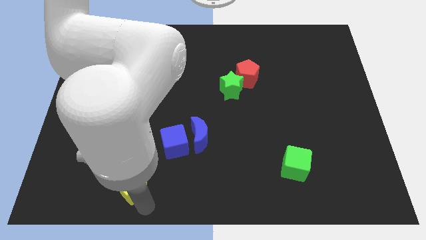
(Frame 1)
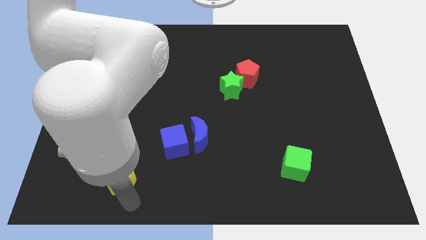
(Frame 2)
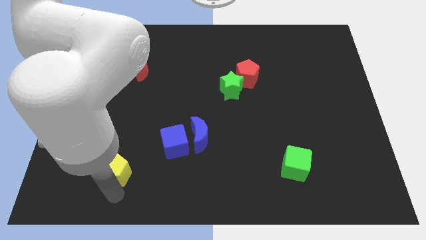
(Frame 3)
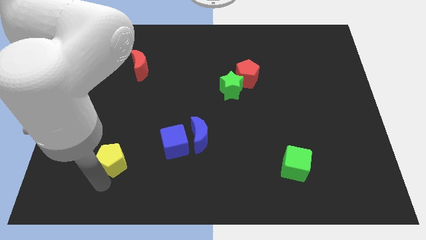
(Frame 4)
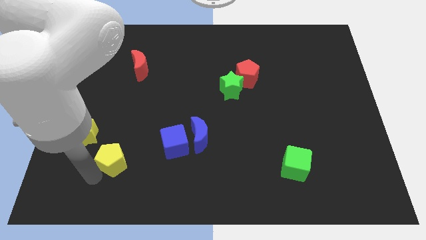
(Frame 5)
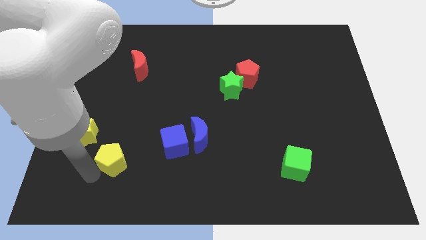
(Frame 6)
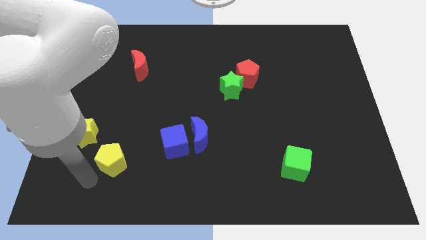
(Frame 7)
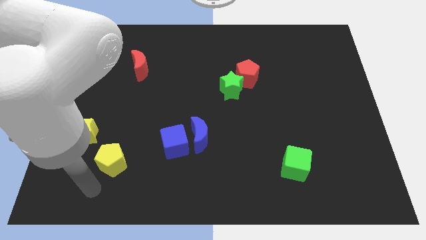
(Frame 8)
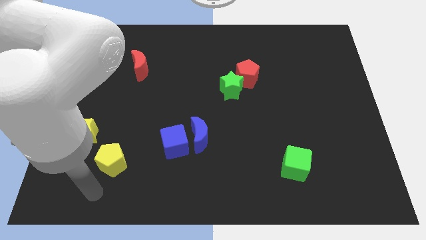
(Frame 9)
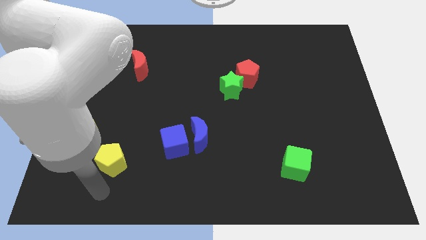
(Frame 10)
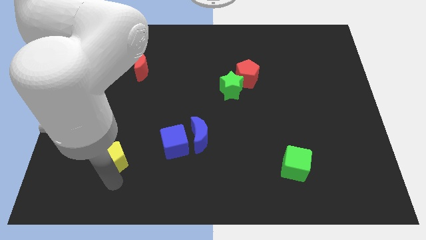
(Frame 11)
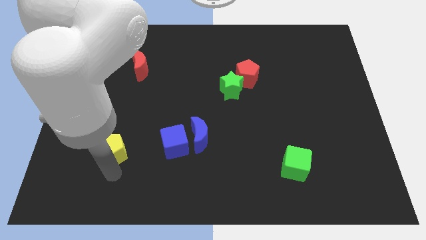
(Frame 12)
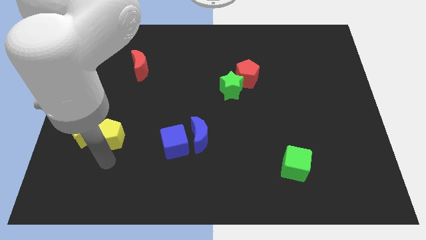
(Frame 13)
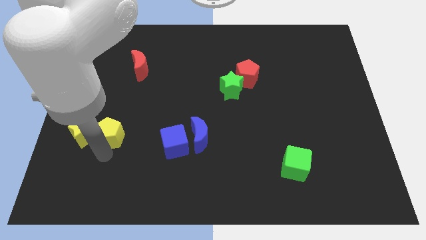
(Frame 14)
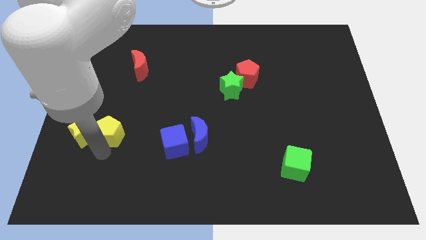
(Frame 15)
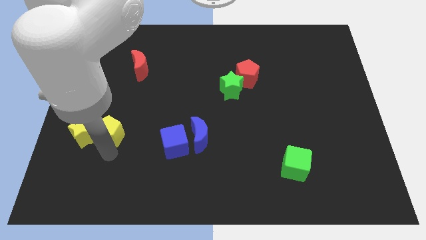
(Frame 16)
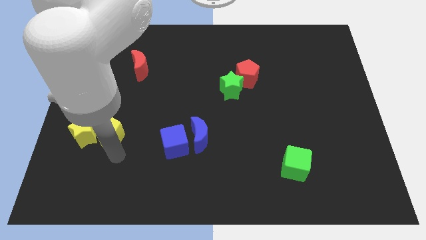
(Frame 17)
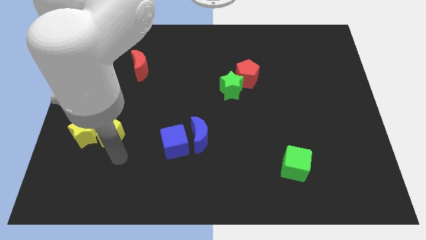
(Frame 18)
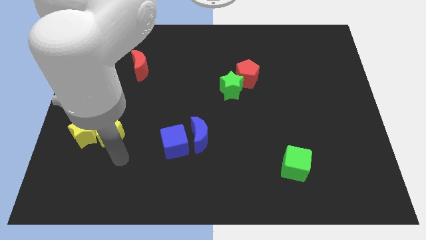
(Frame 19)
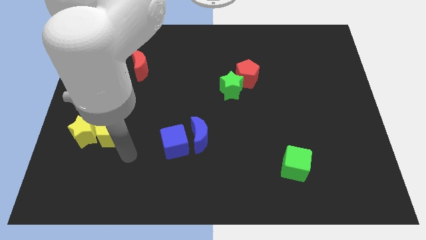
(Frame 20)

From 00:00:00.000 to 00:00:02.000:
push the yellow pentagon into yellow star to the right

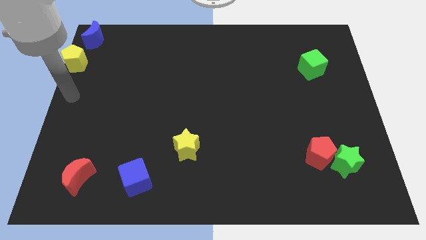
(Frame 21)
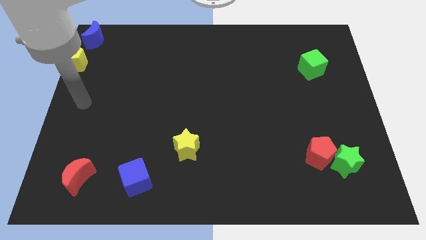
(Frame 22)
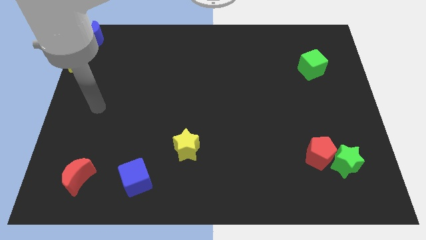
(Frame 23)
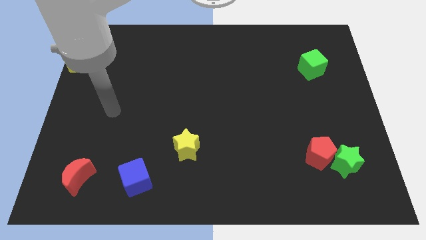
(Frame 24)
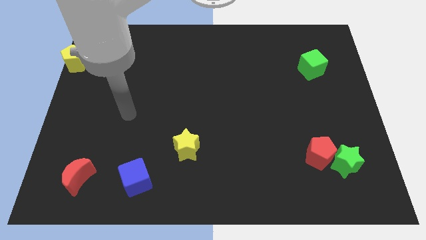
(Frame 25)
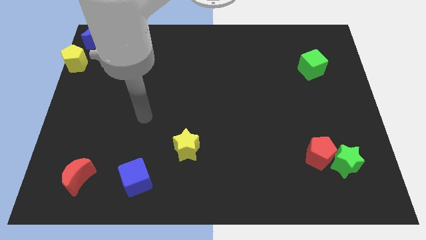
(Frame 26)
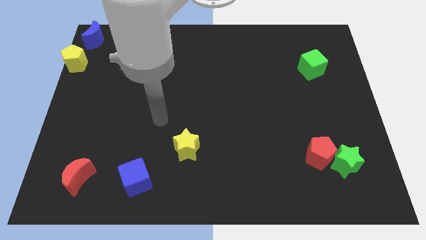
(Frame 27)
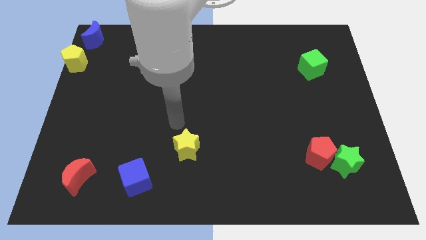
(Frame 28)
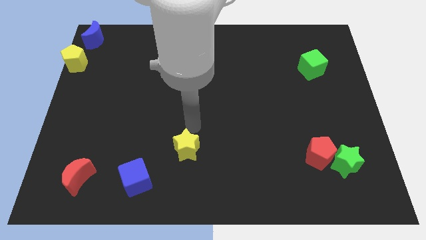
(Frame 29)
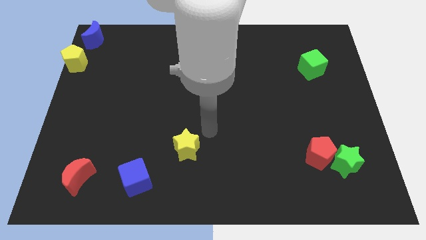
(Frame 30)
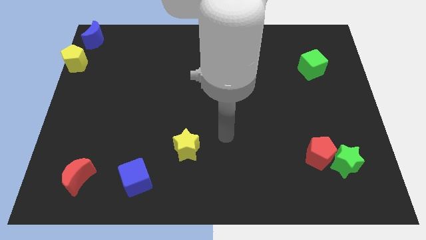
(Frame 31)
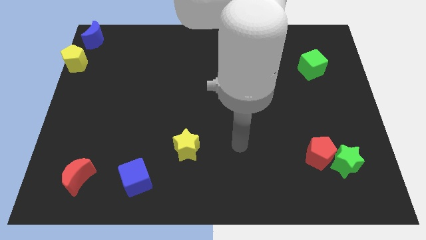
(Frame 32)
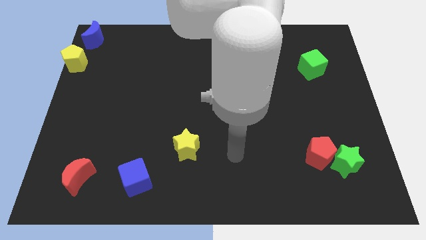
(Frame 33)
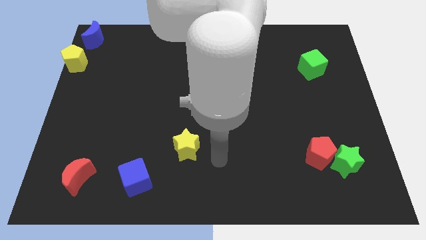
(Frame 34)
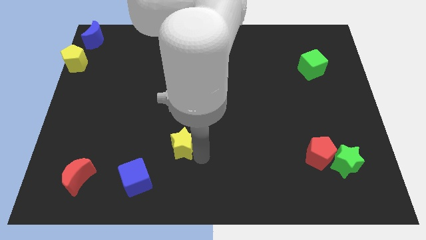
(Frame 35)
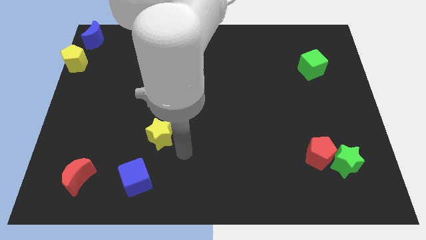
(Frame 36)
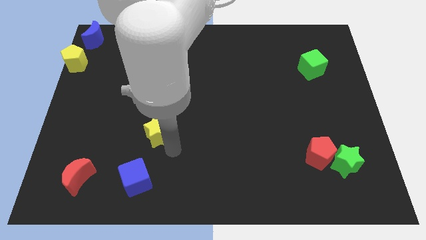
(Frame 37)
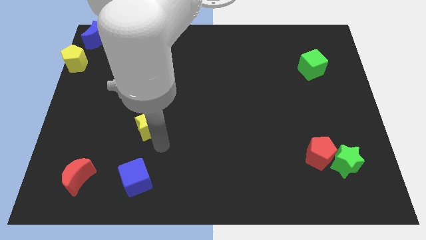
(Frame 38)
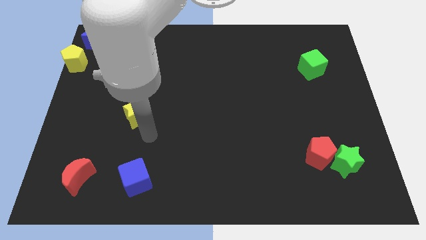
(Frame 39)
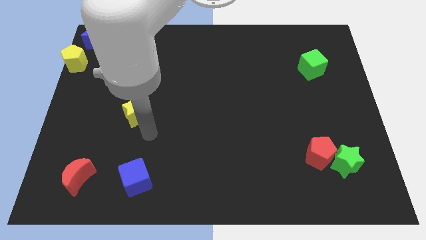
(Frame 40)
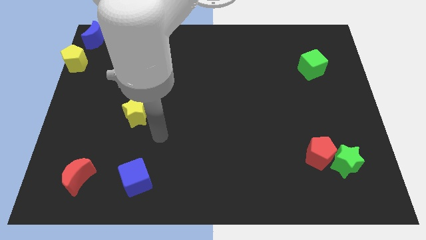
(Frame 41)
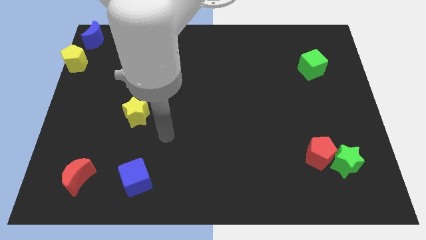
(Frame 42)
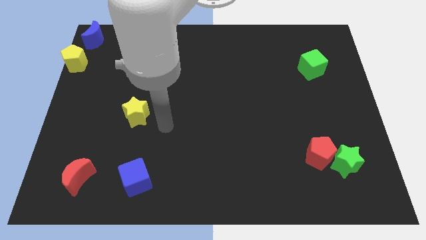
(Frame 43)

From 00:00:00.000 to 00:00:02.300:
push the yellow star parallel to the blue cube

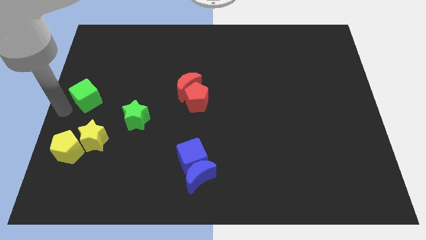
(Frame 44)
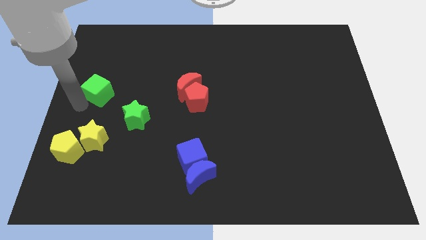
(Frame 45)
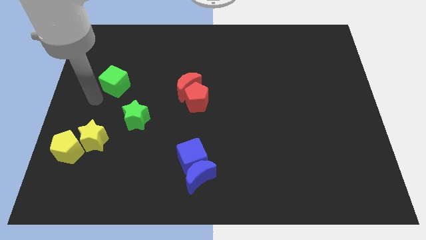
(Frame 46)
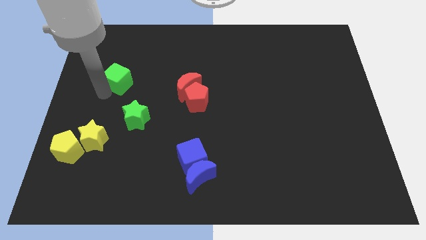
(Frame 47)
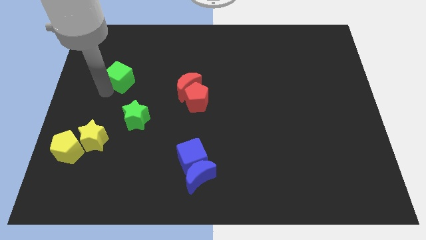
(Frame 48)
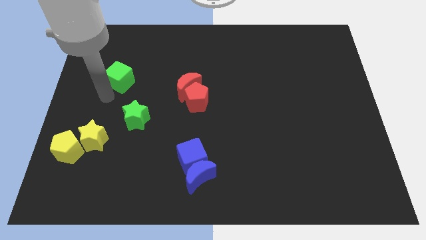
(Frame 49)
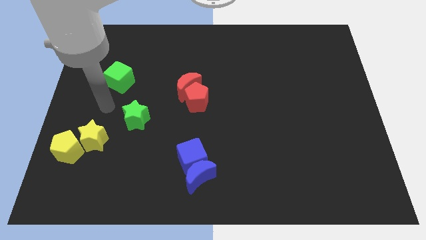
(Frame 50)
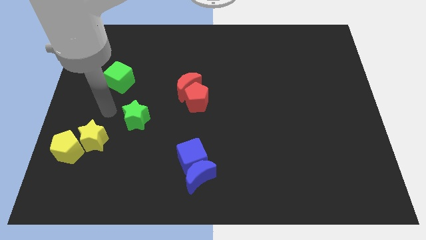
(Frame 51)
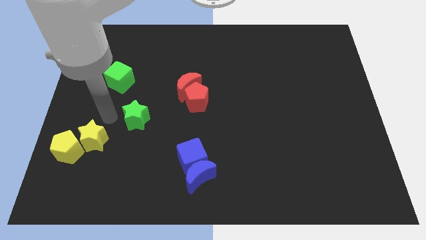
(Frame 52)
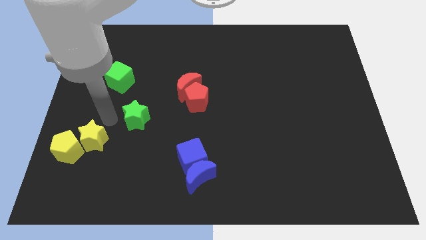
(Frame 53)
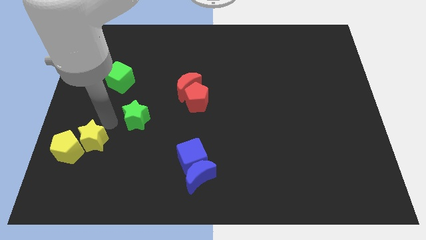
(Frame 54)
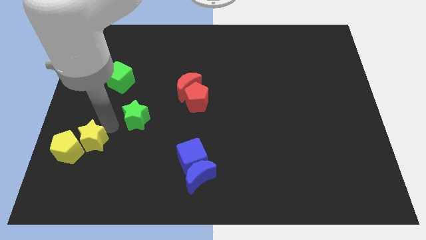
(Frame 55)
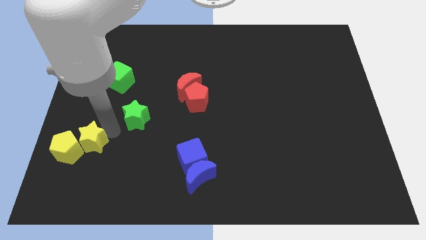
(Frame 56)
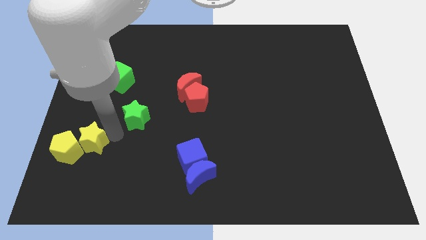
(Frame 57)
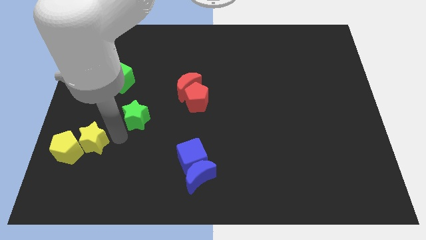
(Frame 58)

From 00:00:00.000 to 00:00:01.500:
push the green cube to the top of the green star

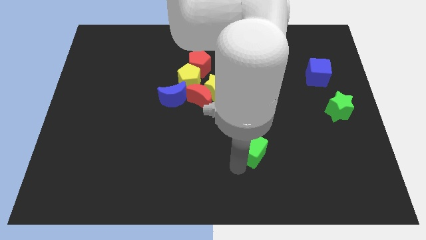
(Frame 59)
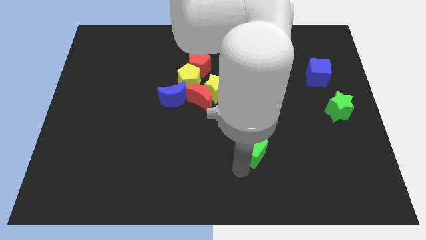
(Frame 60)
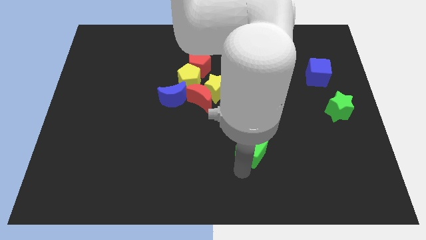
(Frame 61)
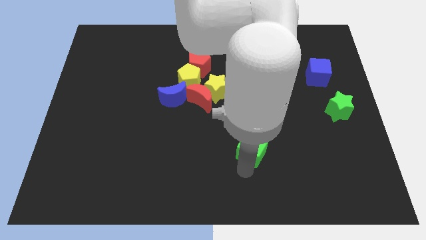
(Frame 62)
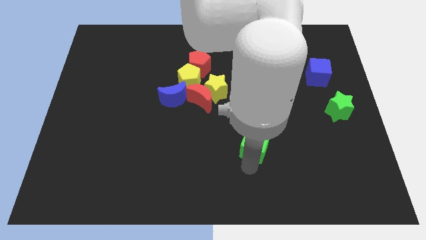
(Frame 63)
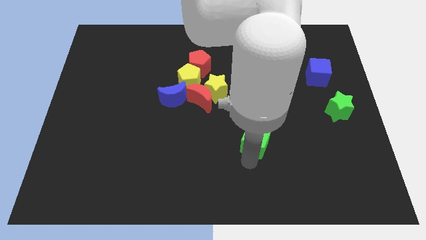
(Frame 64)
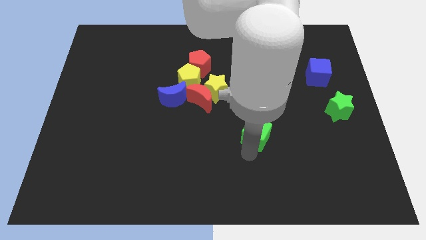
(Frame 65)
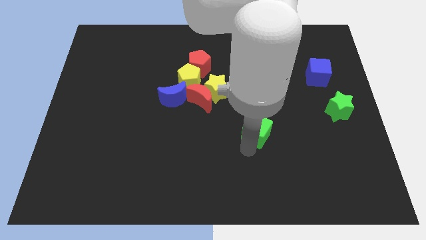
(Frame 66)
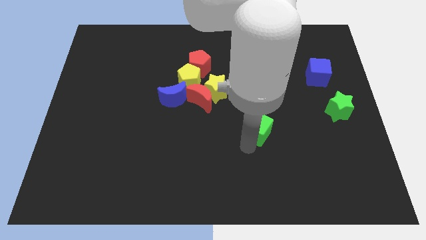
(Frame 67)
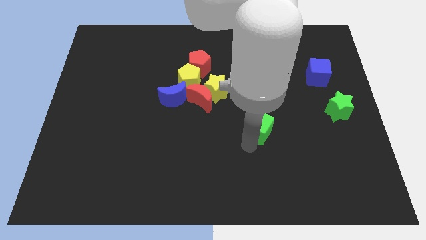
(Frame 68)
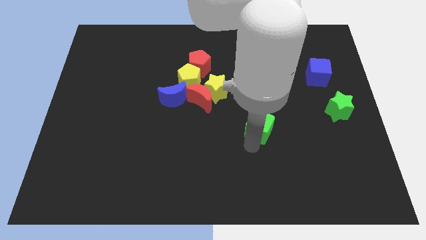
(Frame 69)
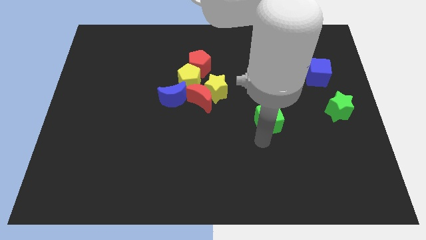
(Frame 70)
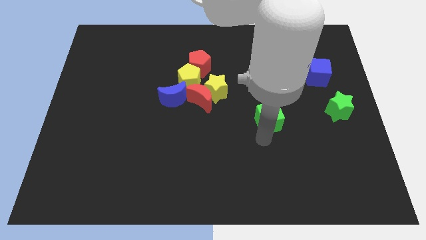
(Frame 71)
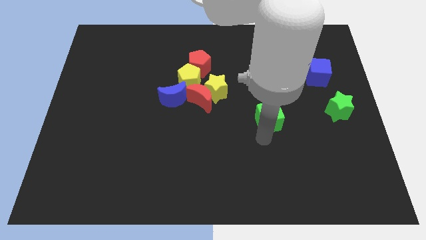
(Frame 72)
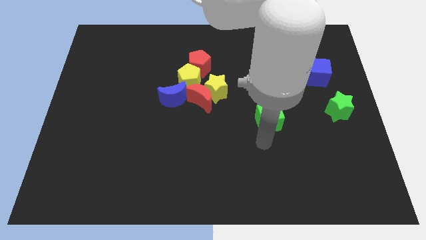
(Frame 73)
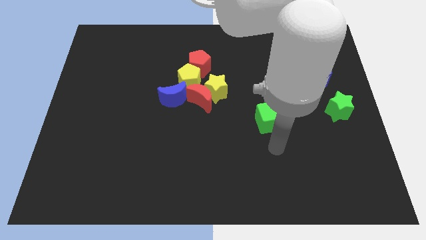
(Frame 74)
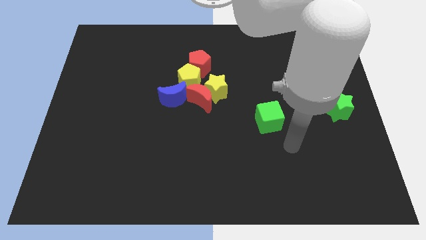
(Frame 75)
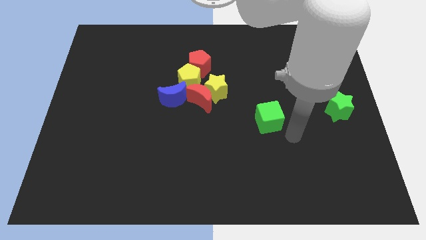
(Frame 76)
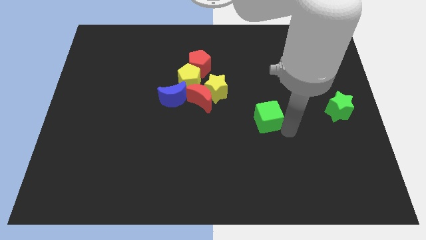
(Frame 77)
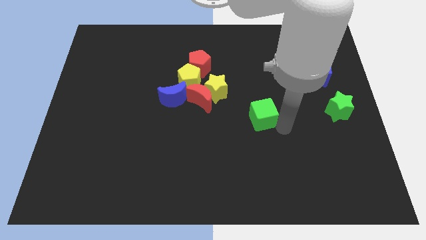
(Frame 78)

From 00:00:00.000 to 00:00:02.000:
place the green cube parallel to the green star

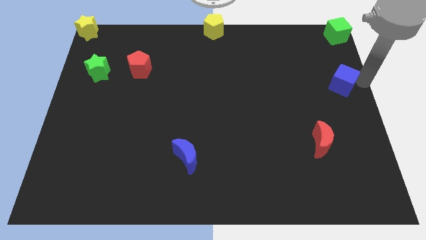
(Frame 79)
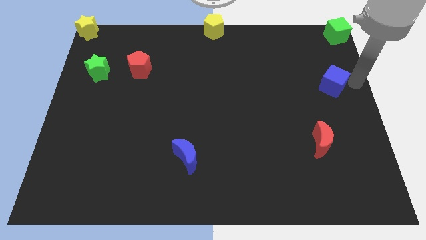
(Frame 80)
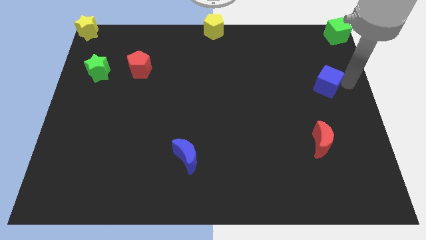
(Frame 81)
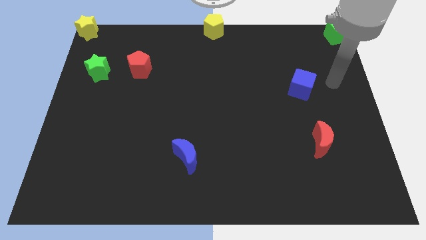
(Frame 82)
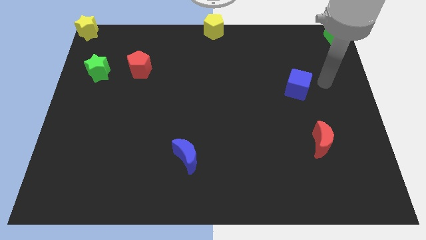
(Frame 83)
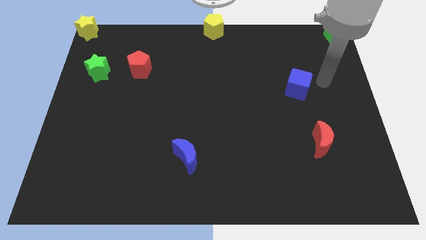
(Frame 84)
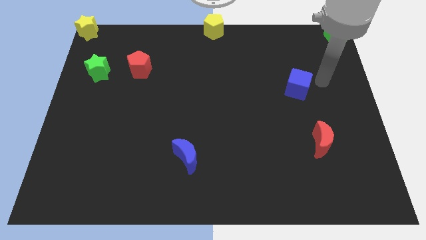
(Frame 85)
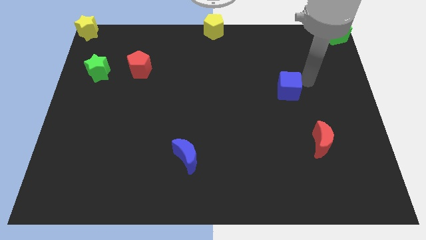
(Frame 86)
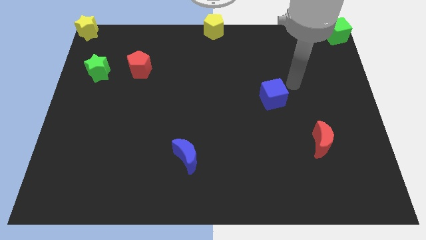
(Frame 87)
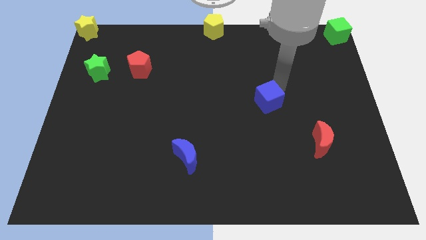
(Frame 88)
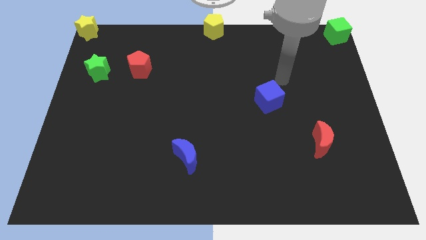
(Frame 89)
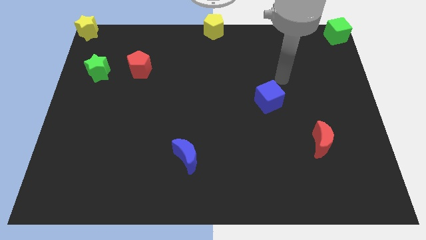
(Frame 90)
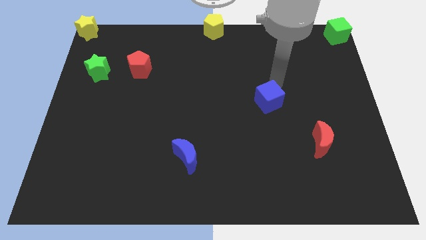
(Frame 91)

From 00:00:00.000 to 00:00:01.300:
move blue cube slightly left
